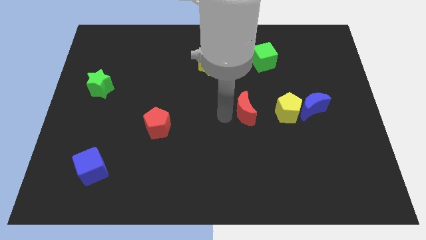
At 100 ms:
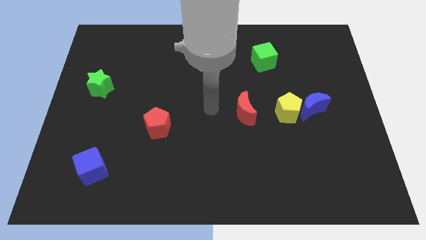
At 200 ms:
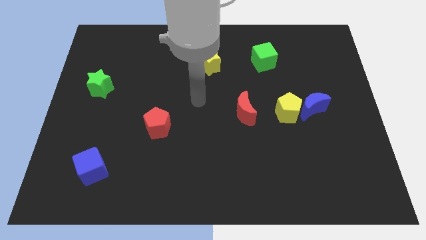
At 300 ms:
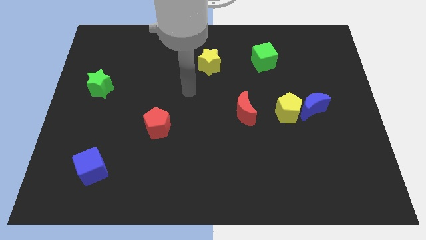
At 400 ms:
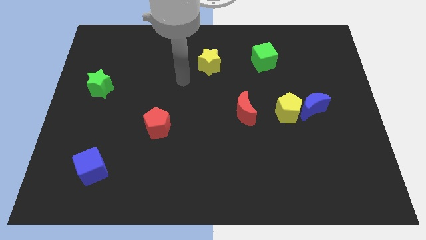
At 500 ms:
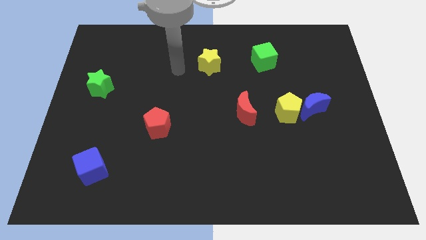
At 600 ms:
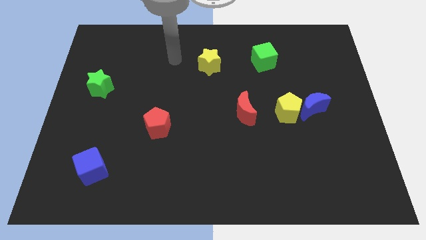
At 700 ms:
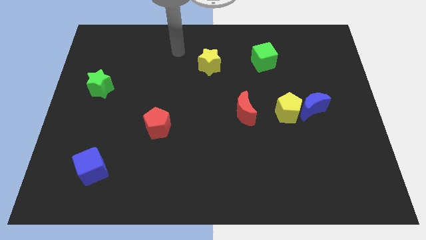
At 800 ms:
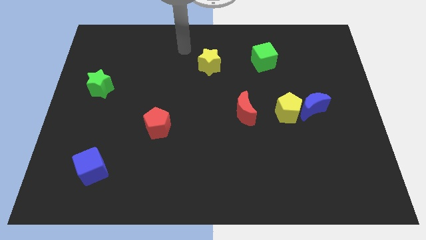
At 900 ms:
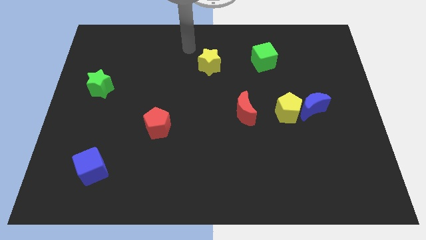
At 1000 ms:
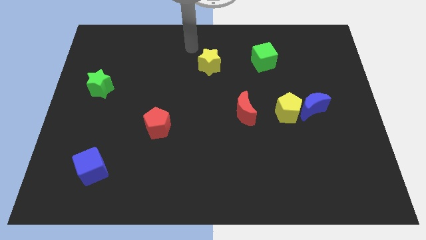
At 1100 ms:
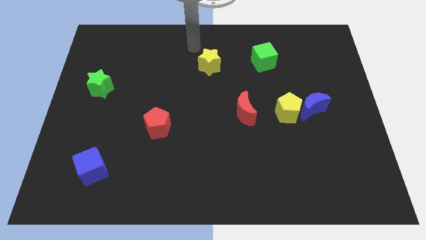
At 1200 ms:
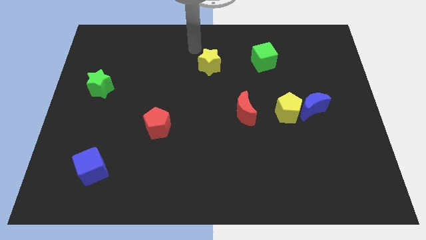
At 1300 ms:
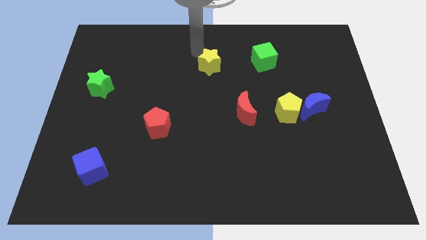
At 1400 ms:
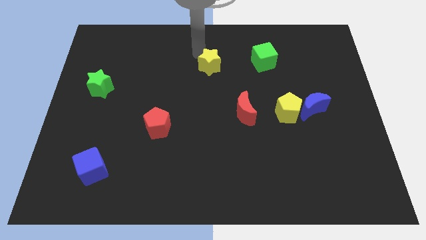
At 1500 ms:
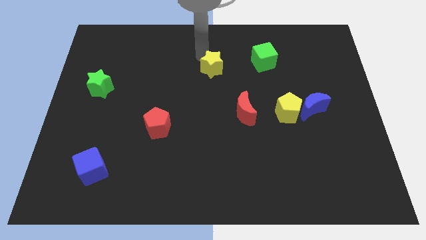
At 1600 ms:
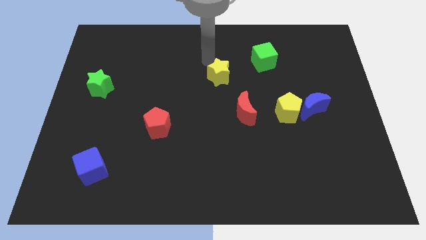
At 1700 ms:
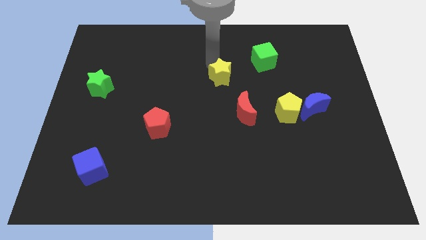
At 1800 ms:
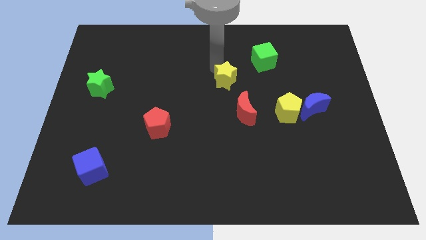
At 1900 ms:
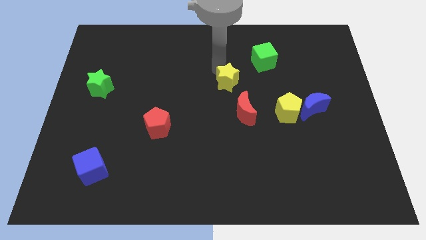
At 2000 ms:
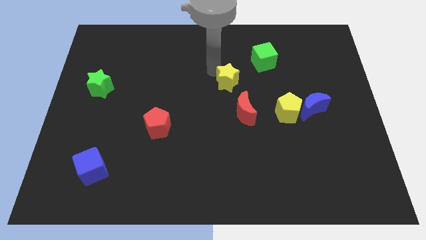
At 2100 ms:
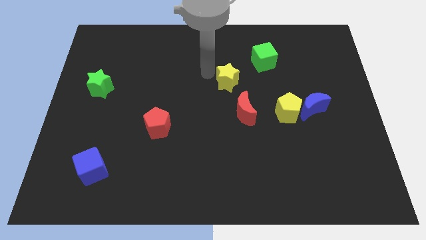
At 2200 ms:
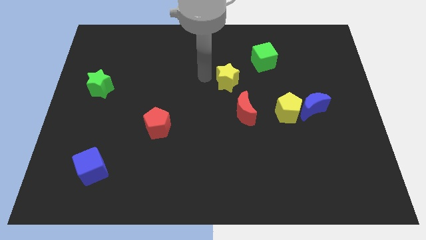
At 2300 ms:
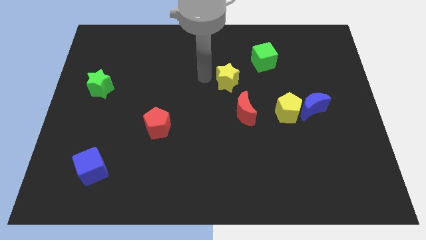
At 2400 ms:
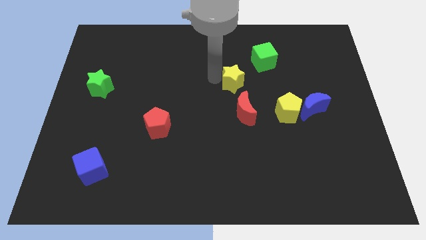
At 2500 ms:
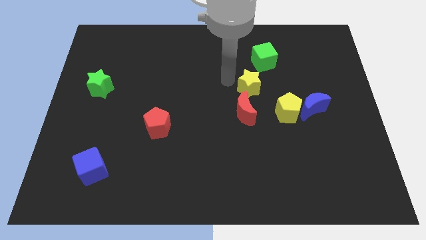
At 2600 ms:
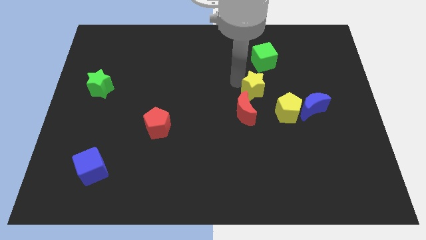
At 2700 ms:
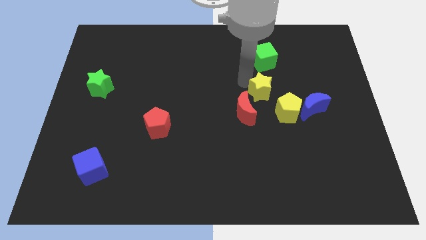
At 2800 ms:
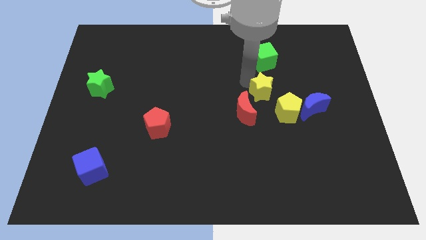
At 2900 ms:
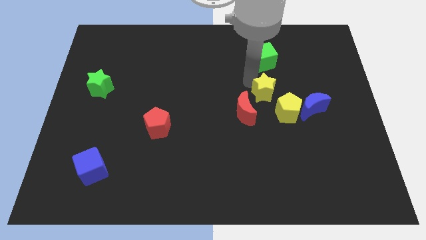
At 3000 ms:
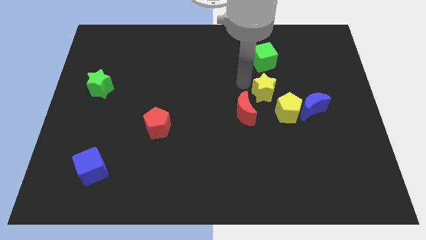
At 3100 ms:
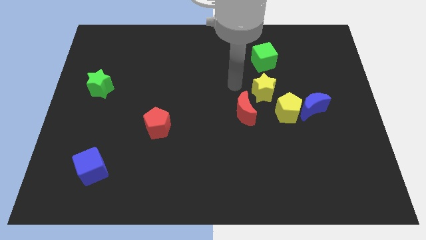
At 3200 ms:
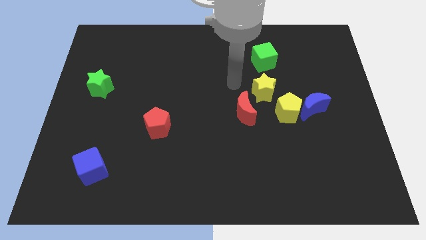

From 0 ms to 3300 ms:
put the yellow star bottom left to the green cube

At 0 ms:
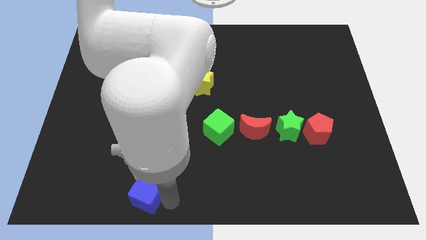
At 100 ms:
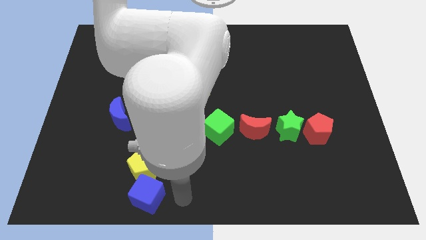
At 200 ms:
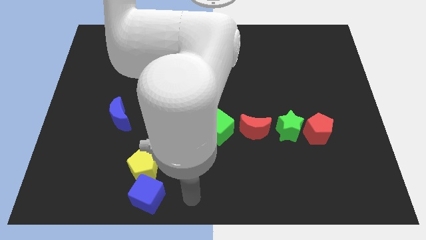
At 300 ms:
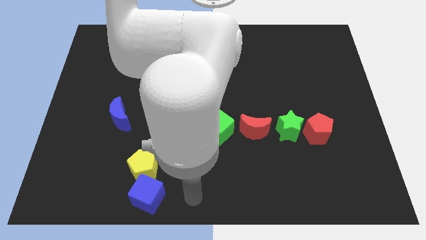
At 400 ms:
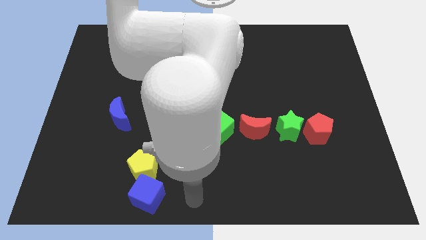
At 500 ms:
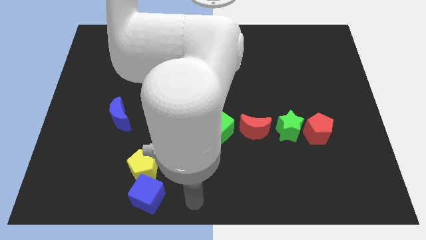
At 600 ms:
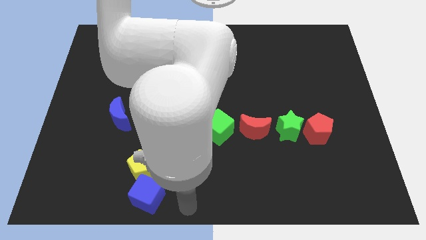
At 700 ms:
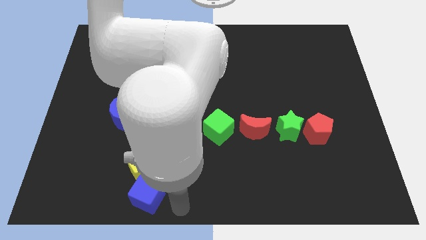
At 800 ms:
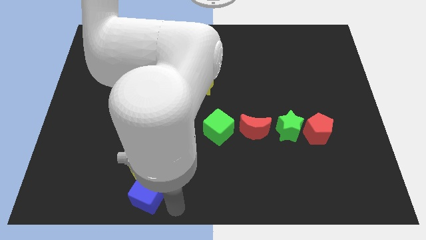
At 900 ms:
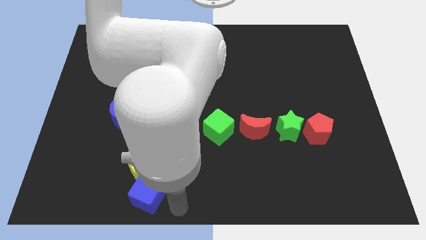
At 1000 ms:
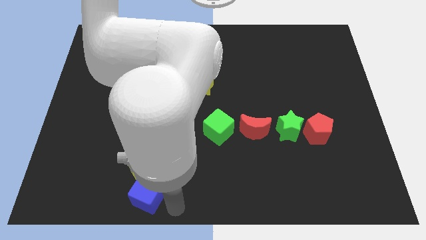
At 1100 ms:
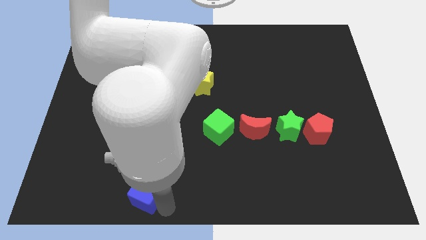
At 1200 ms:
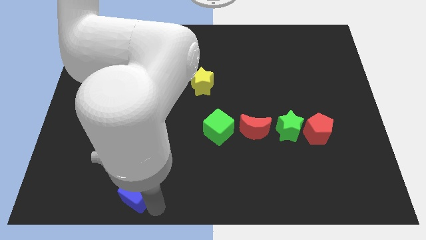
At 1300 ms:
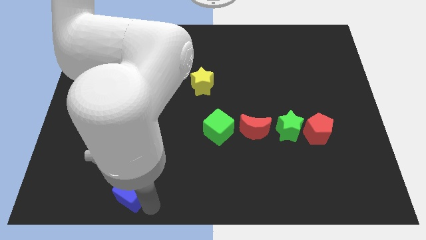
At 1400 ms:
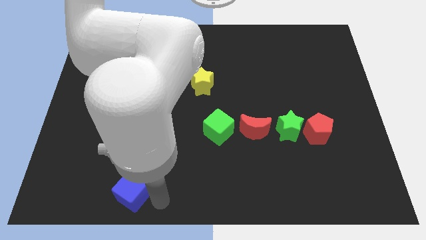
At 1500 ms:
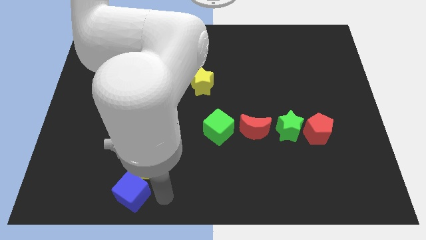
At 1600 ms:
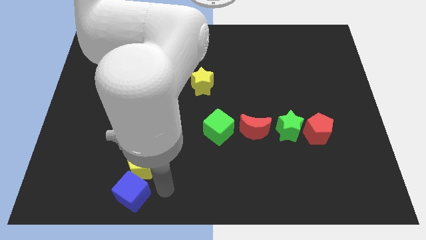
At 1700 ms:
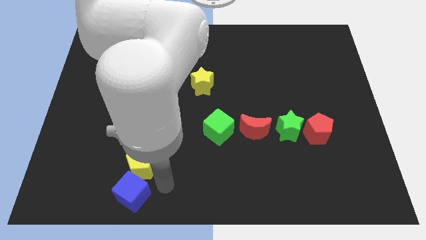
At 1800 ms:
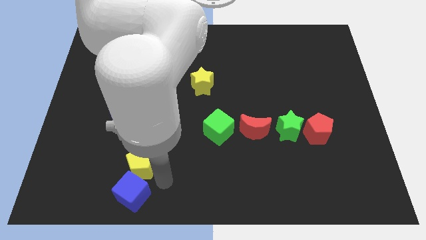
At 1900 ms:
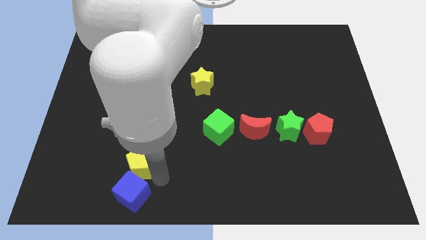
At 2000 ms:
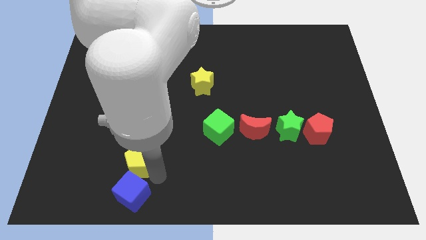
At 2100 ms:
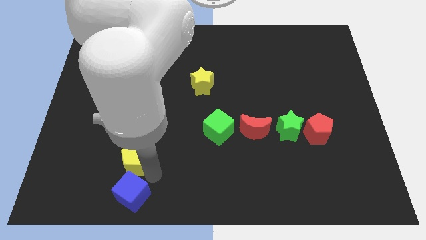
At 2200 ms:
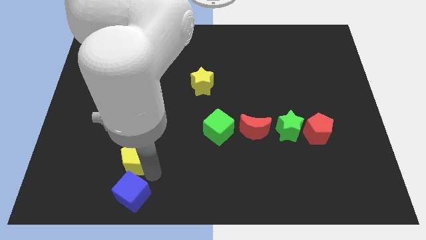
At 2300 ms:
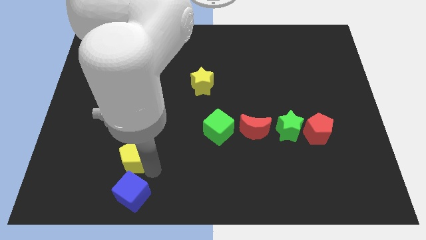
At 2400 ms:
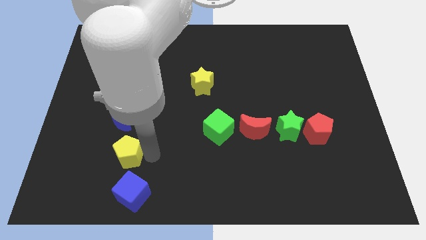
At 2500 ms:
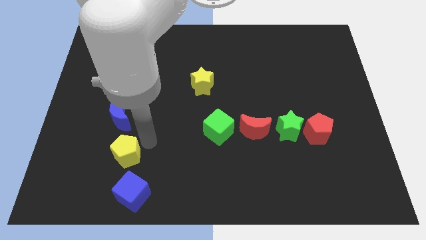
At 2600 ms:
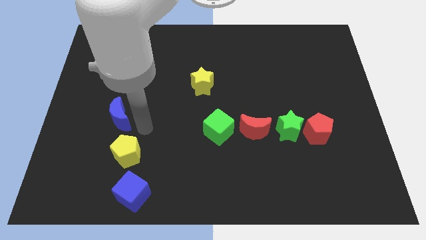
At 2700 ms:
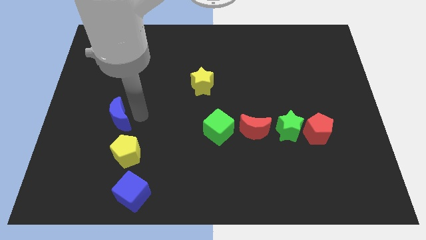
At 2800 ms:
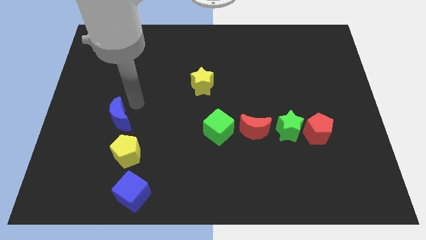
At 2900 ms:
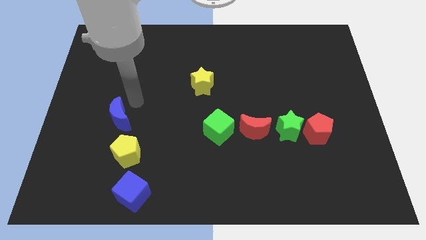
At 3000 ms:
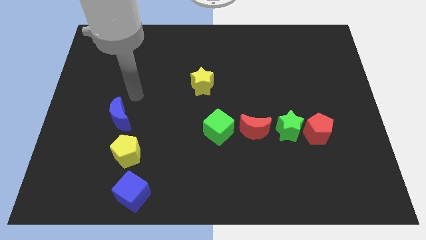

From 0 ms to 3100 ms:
place yellow pentagon in between blue blocks

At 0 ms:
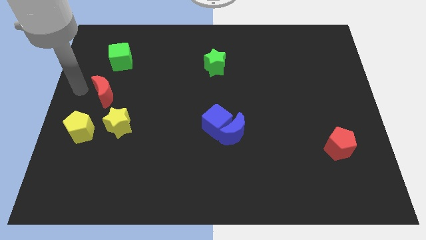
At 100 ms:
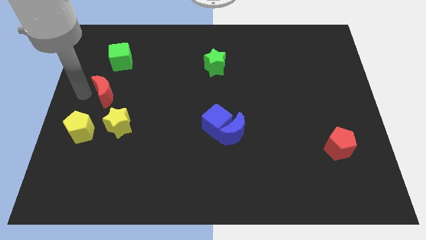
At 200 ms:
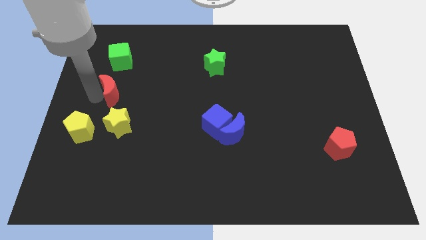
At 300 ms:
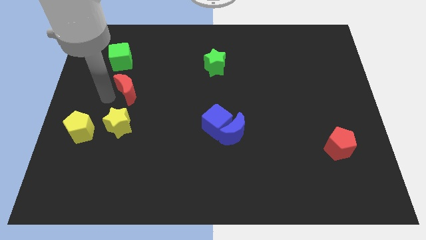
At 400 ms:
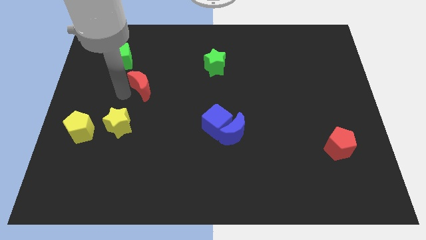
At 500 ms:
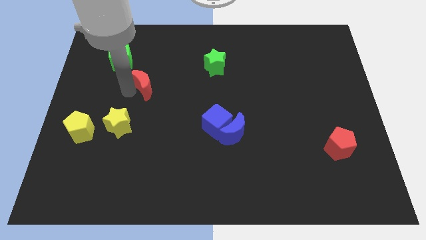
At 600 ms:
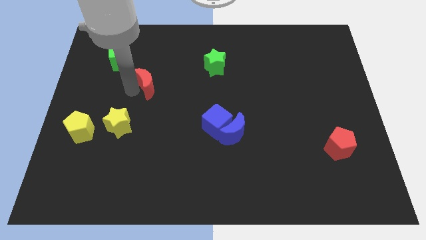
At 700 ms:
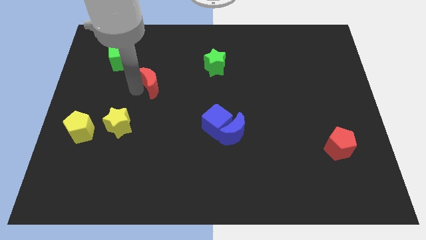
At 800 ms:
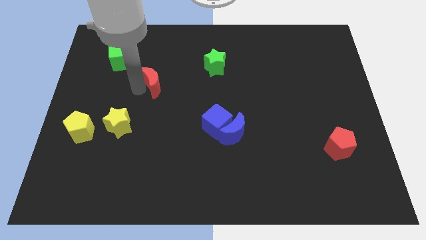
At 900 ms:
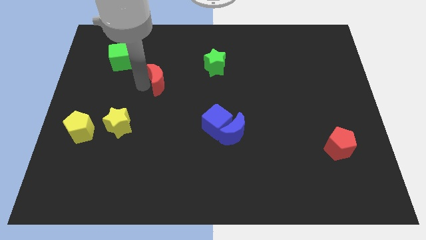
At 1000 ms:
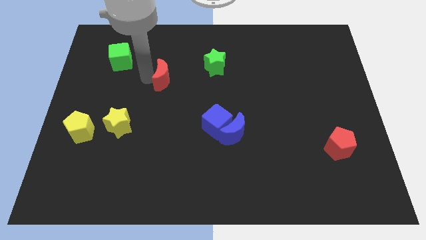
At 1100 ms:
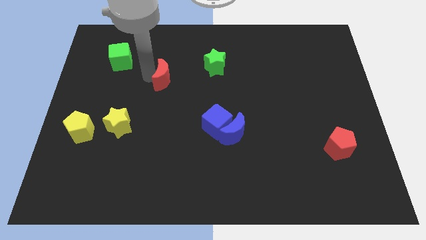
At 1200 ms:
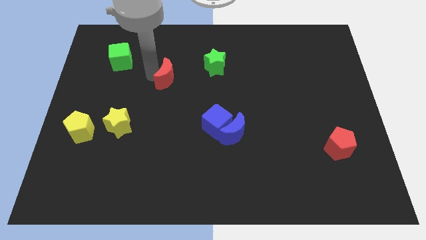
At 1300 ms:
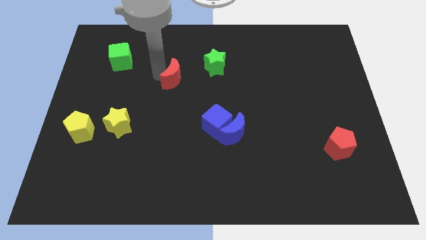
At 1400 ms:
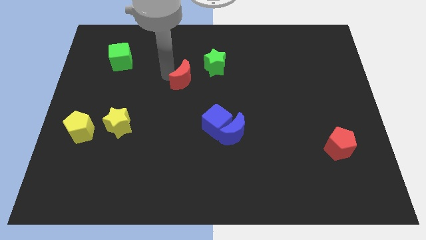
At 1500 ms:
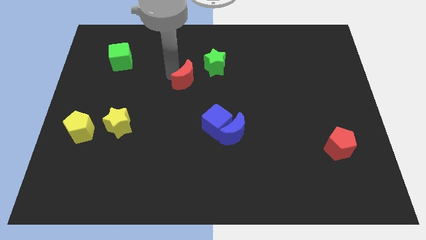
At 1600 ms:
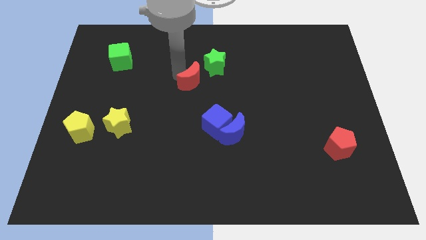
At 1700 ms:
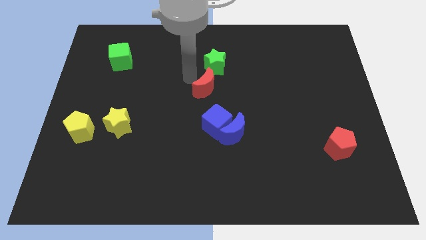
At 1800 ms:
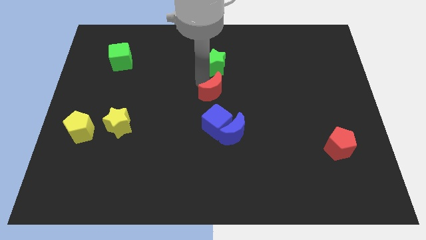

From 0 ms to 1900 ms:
place the red crescent in between the green star and blue cube

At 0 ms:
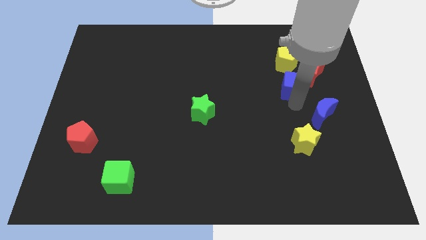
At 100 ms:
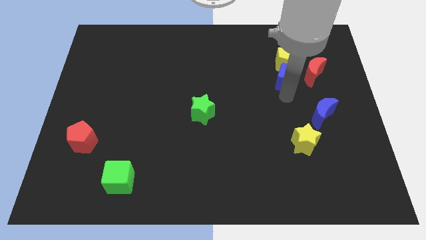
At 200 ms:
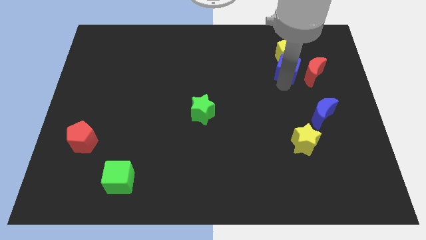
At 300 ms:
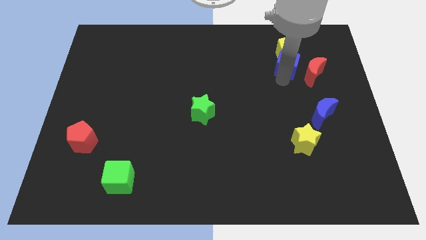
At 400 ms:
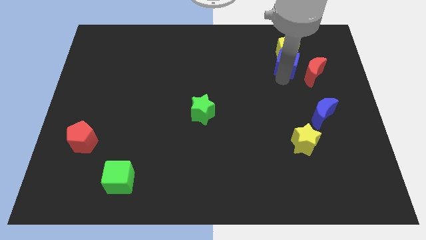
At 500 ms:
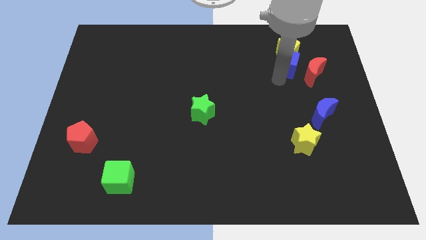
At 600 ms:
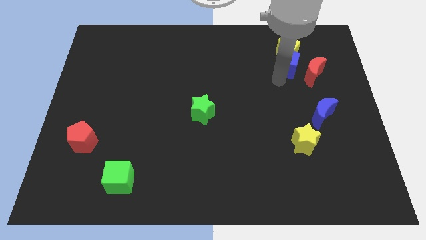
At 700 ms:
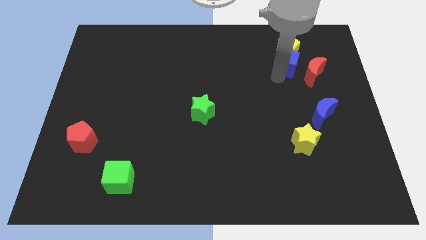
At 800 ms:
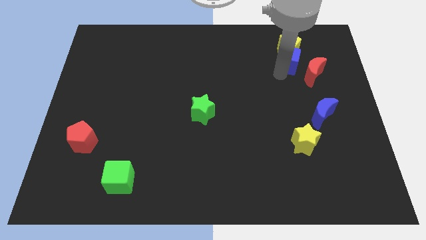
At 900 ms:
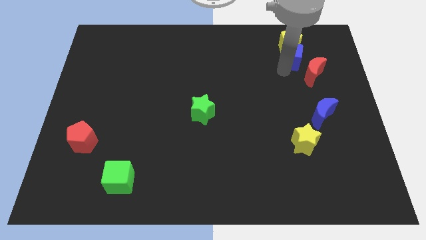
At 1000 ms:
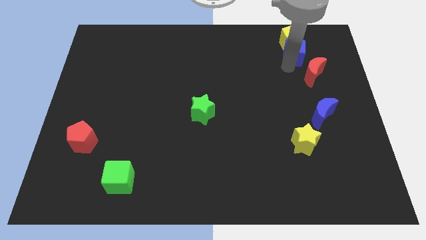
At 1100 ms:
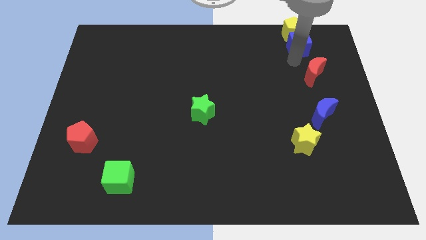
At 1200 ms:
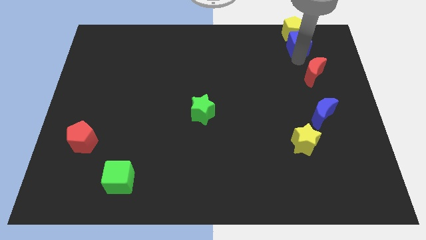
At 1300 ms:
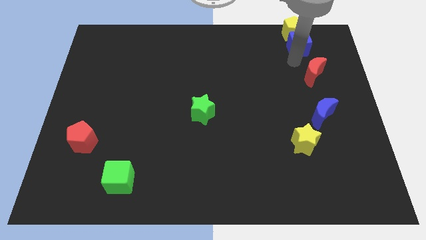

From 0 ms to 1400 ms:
drag the yellow pentagon and blue cube towards the top right side of the board
